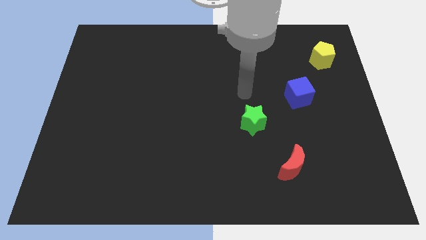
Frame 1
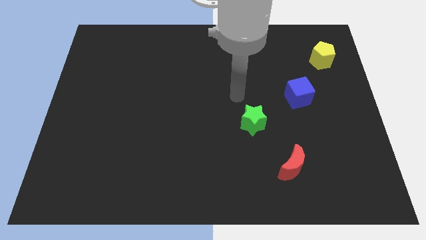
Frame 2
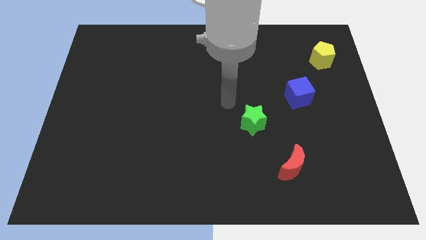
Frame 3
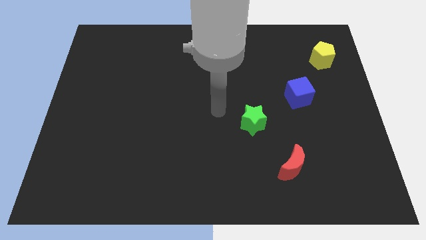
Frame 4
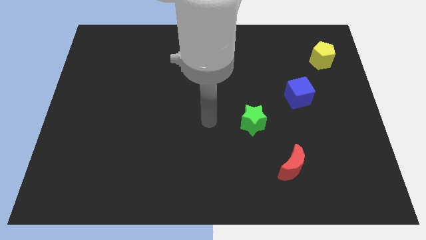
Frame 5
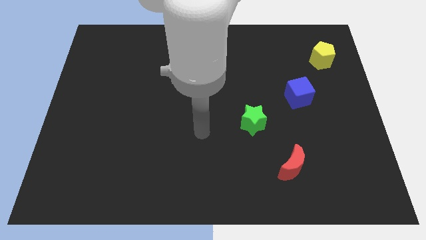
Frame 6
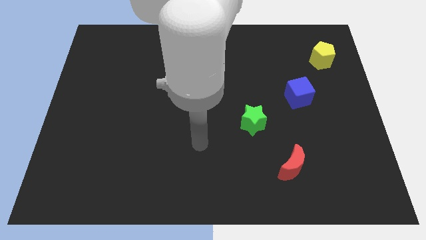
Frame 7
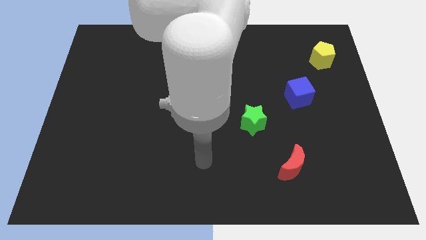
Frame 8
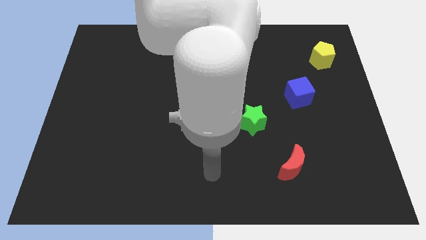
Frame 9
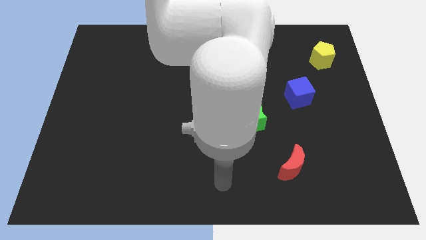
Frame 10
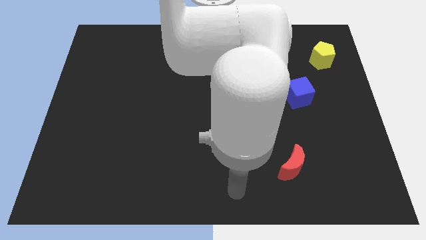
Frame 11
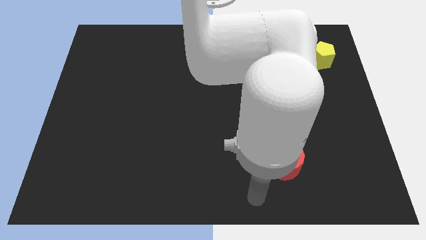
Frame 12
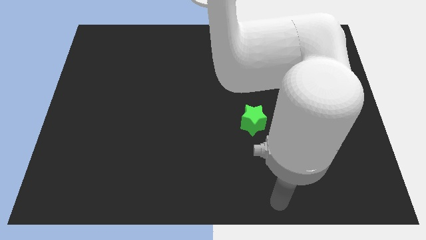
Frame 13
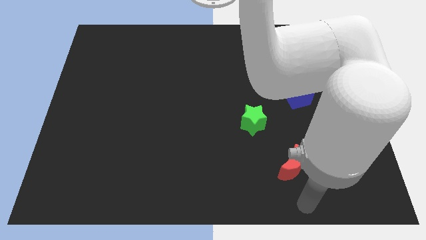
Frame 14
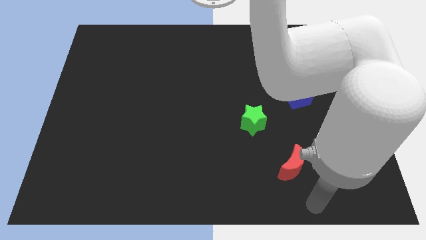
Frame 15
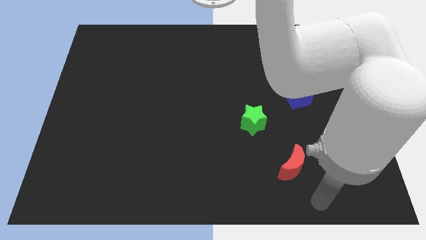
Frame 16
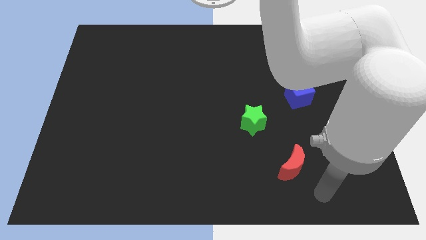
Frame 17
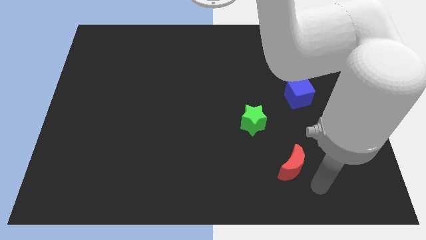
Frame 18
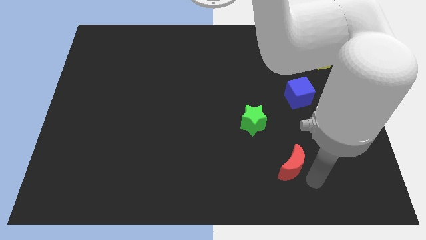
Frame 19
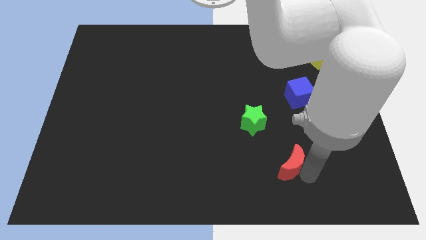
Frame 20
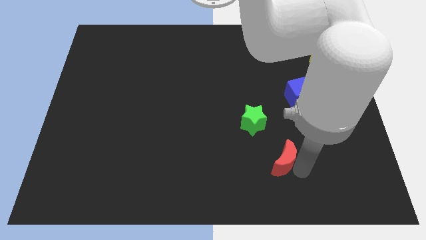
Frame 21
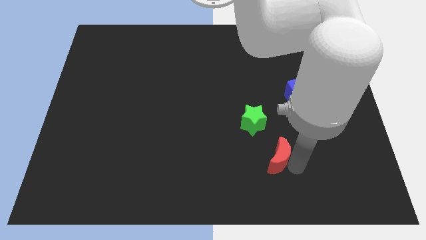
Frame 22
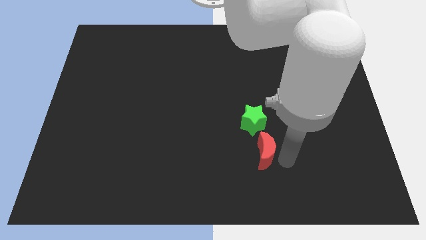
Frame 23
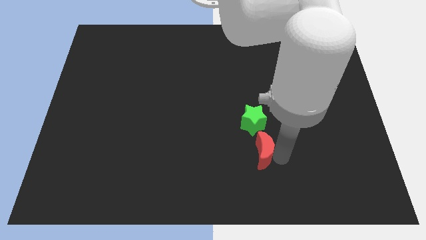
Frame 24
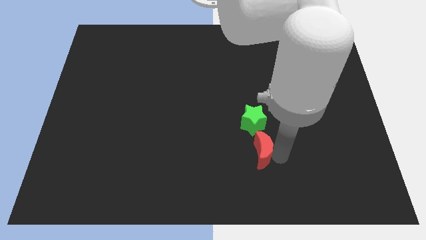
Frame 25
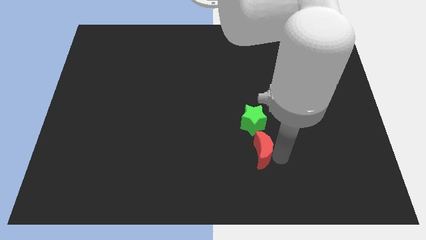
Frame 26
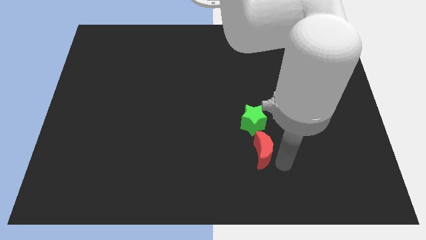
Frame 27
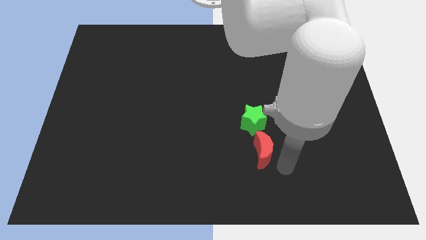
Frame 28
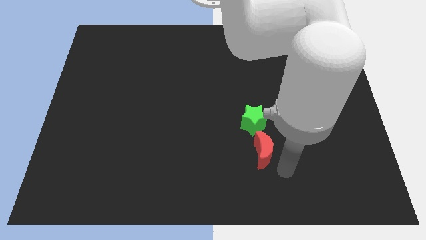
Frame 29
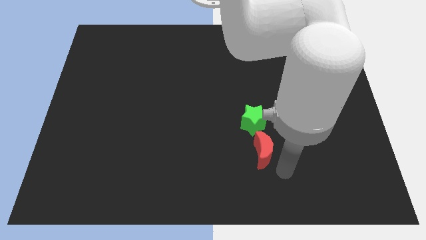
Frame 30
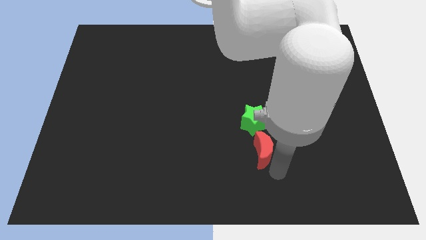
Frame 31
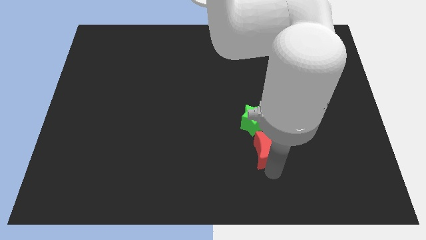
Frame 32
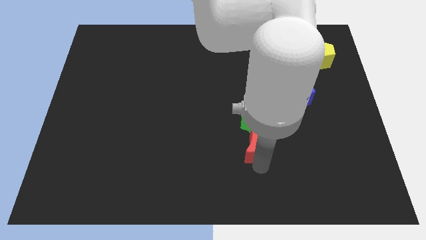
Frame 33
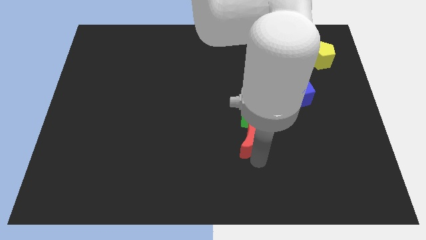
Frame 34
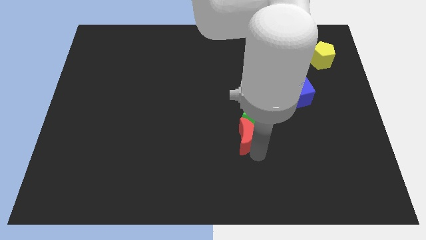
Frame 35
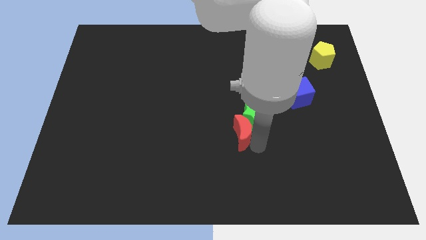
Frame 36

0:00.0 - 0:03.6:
push the red moon close to the green block

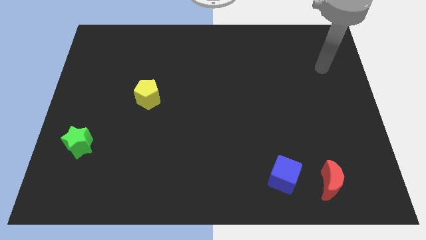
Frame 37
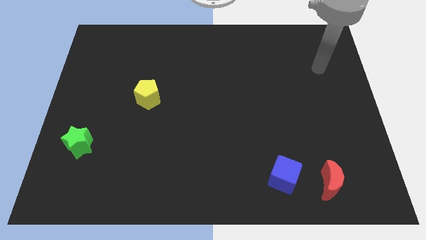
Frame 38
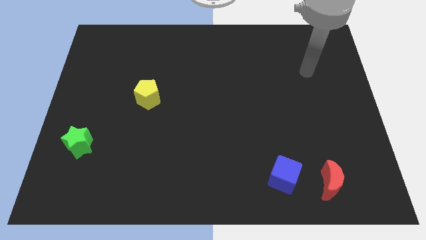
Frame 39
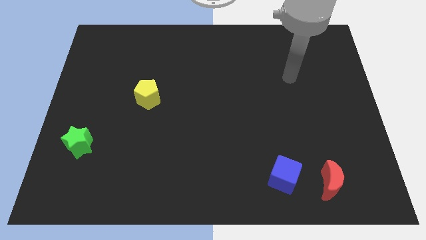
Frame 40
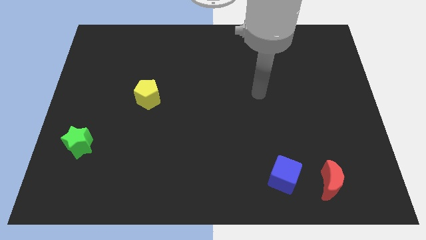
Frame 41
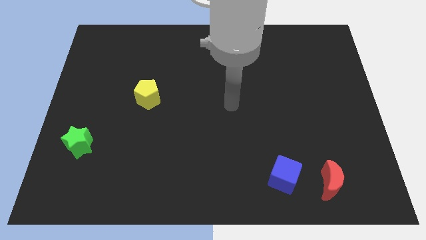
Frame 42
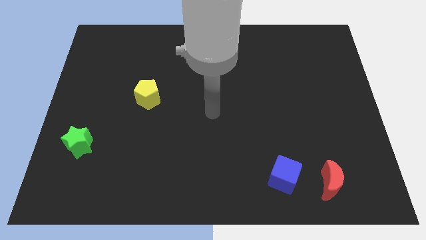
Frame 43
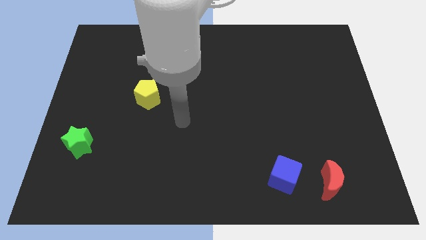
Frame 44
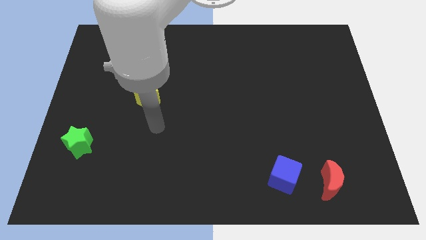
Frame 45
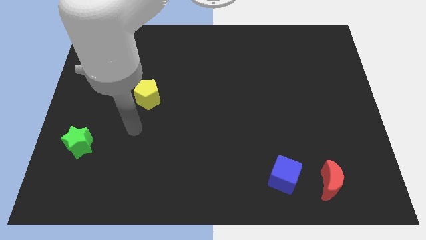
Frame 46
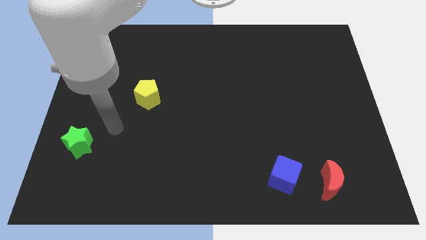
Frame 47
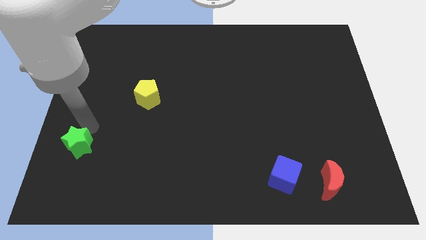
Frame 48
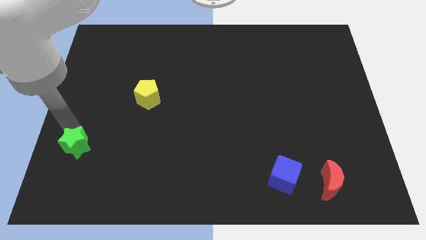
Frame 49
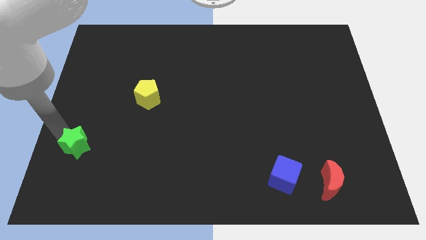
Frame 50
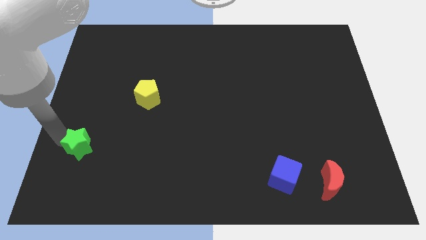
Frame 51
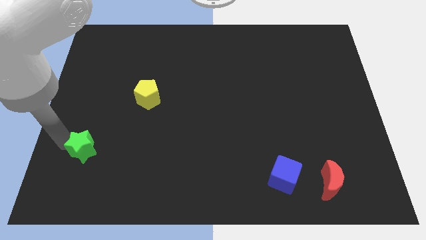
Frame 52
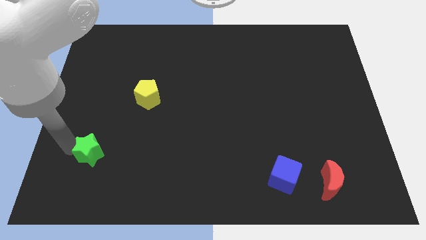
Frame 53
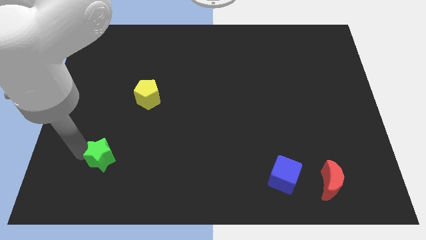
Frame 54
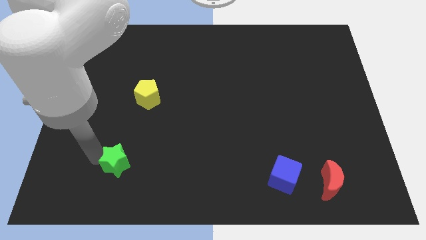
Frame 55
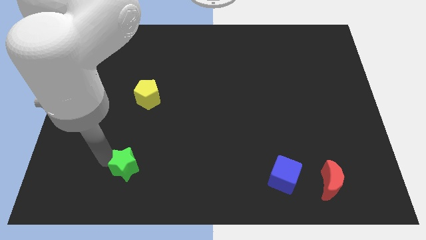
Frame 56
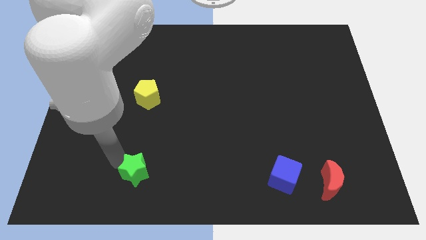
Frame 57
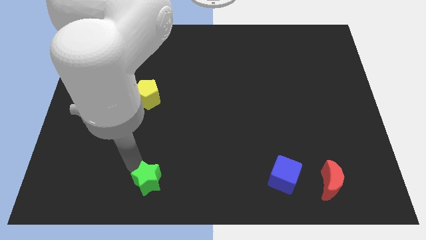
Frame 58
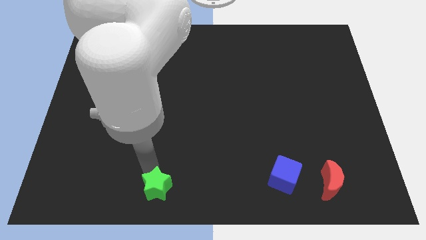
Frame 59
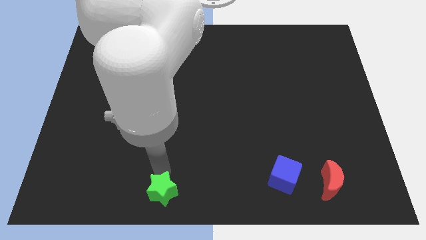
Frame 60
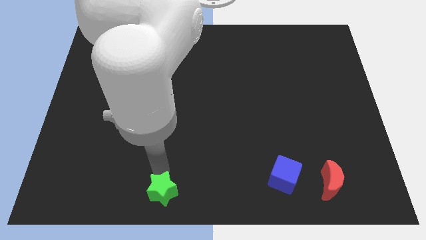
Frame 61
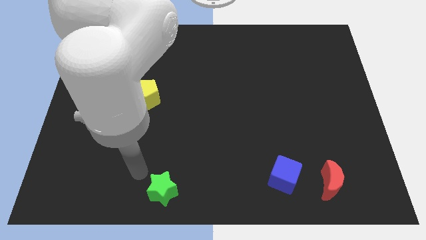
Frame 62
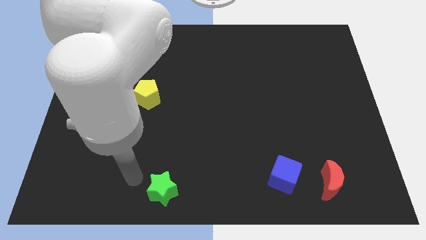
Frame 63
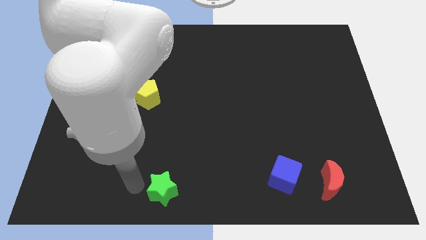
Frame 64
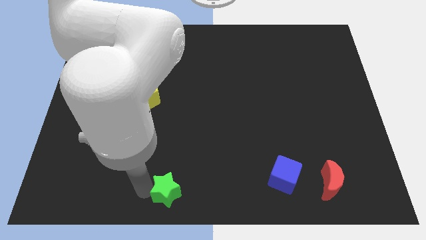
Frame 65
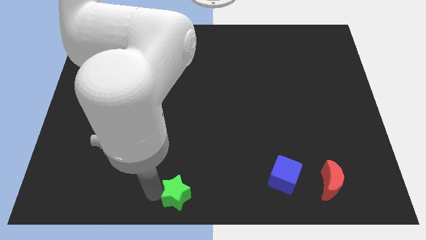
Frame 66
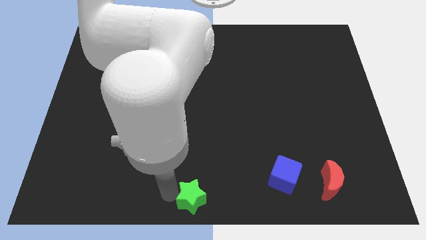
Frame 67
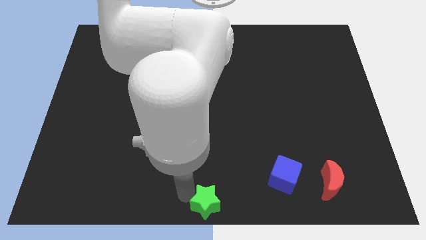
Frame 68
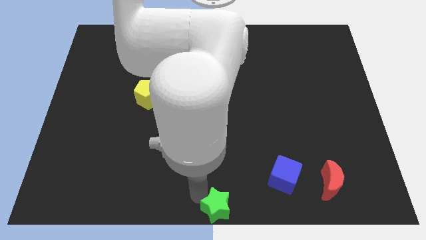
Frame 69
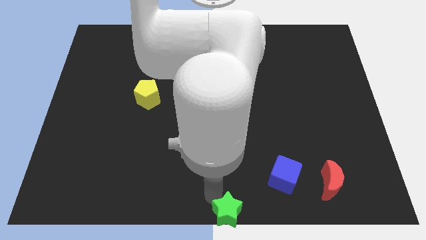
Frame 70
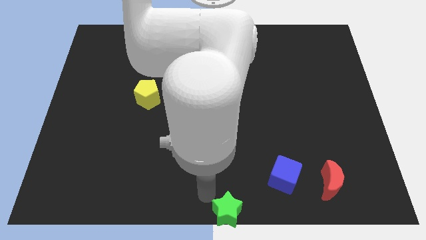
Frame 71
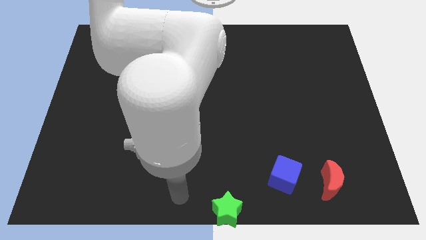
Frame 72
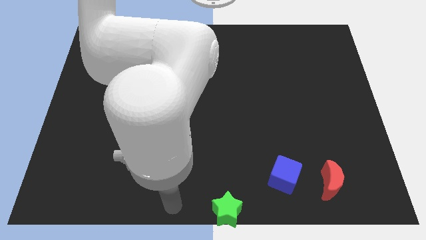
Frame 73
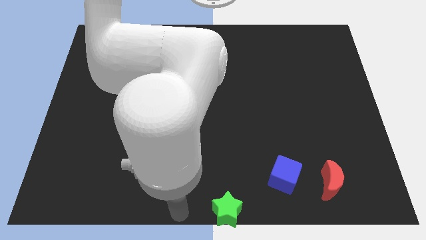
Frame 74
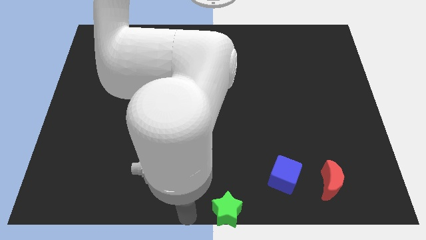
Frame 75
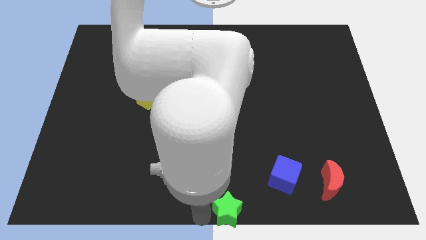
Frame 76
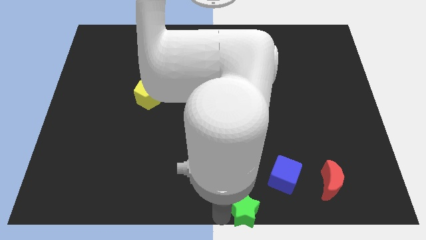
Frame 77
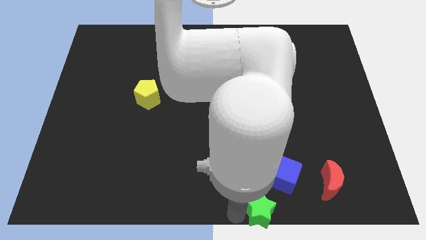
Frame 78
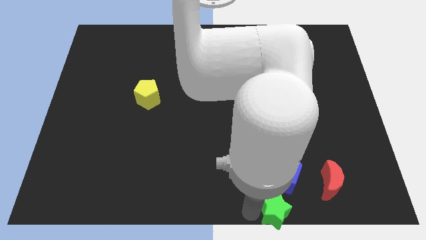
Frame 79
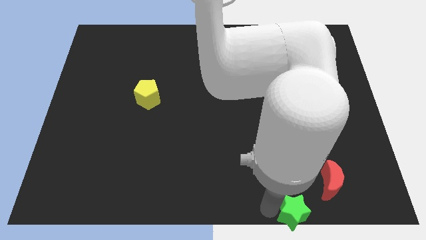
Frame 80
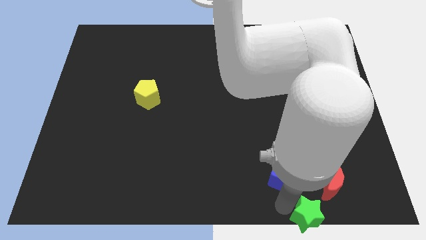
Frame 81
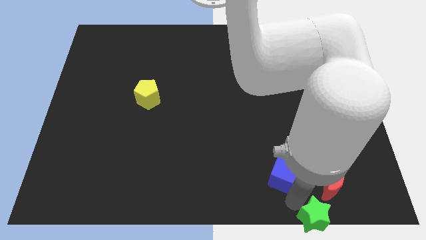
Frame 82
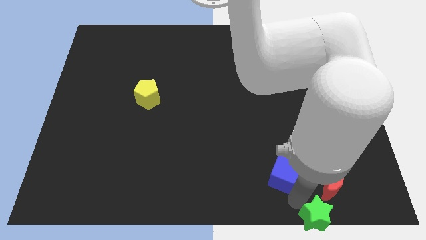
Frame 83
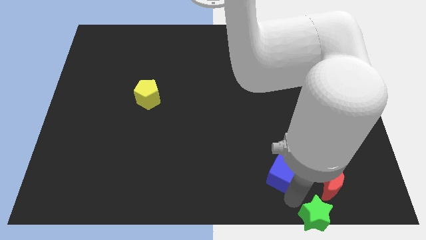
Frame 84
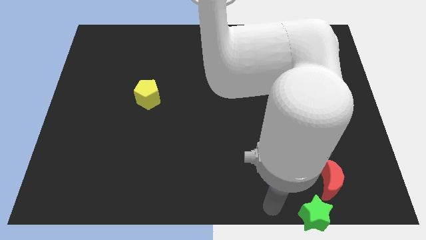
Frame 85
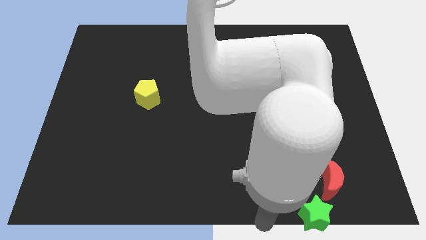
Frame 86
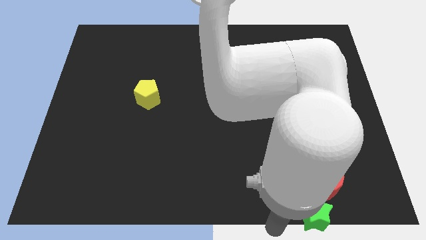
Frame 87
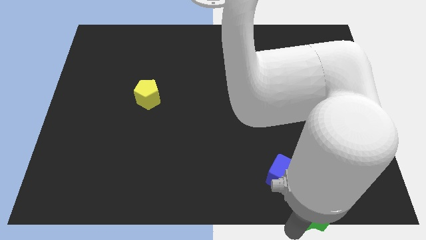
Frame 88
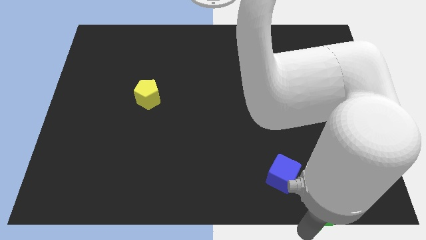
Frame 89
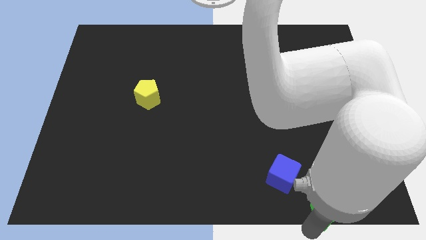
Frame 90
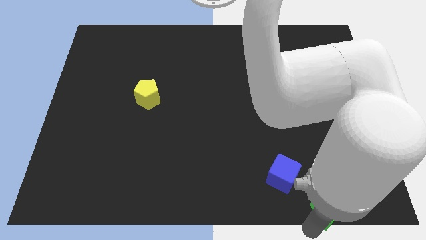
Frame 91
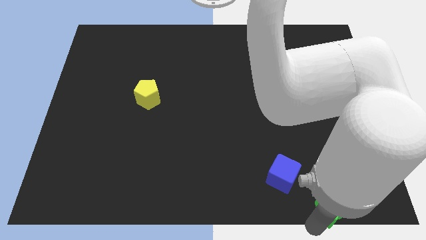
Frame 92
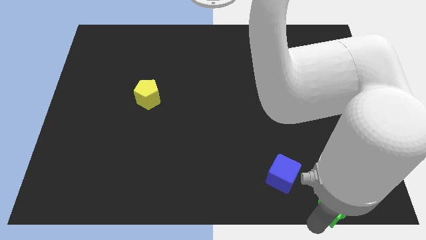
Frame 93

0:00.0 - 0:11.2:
slide the green star to the red block
